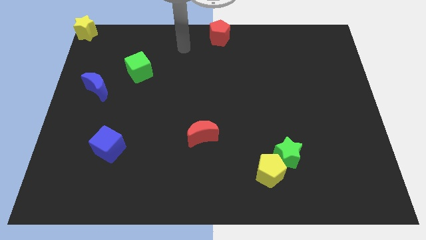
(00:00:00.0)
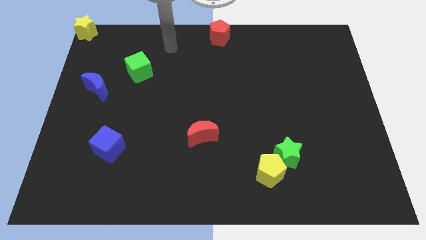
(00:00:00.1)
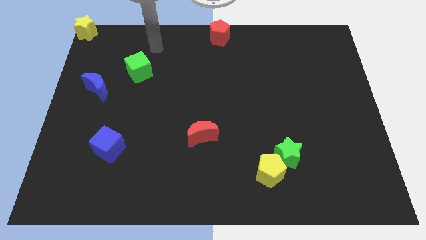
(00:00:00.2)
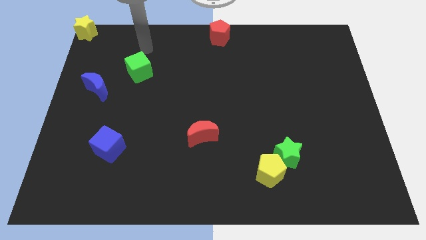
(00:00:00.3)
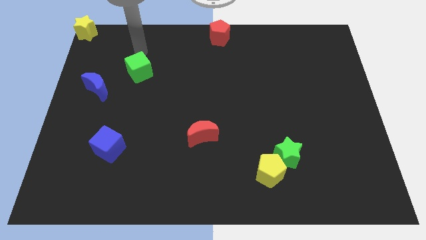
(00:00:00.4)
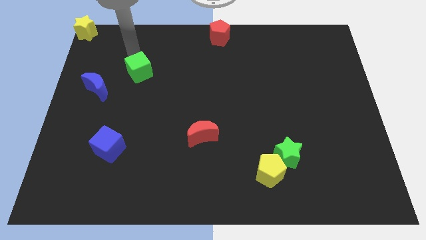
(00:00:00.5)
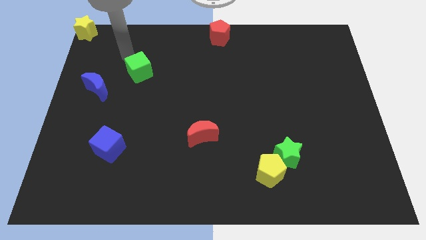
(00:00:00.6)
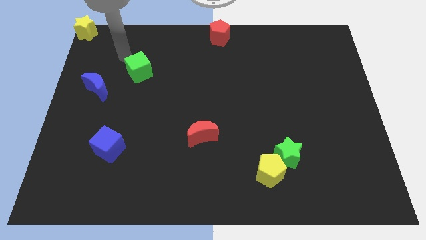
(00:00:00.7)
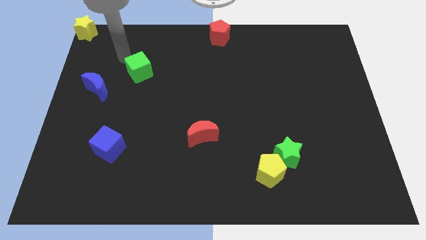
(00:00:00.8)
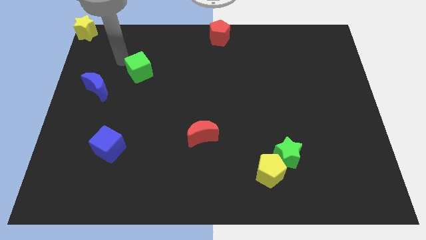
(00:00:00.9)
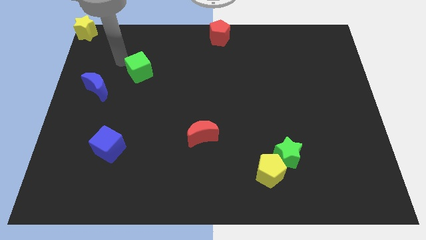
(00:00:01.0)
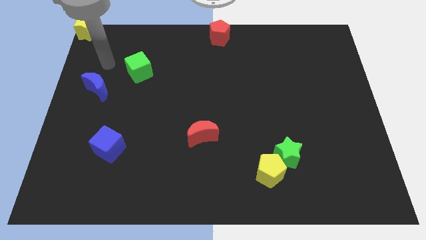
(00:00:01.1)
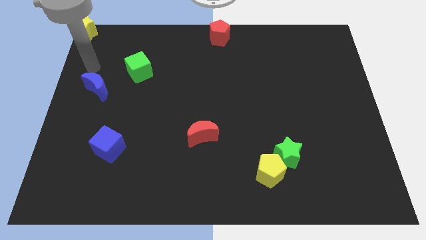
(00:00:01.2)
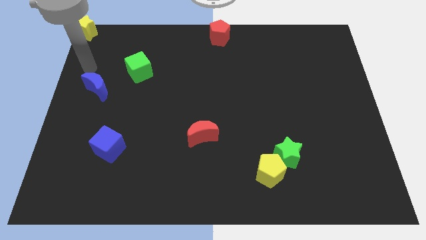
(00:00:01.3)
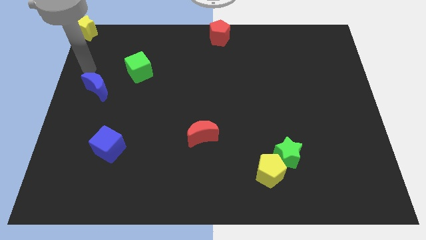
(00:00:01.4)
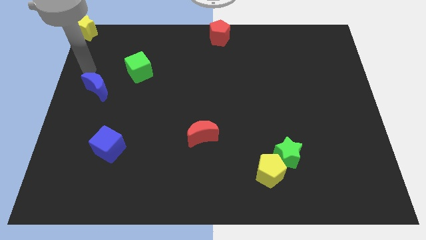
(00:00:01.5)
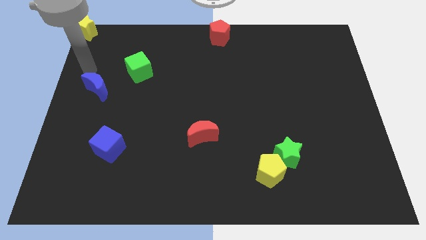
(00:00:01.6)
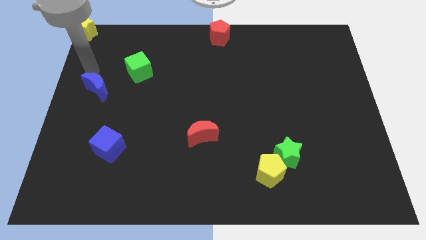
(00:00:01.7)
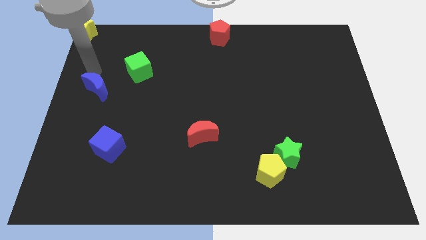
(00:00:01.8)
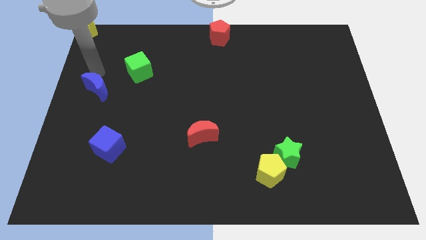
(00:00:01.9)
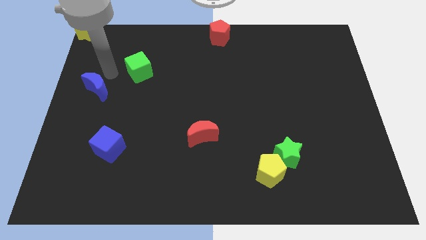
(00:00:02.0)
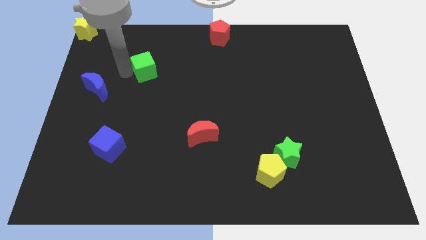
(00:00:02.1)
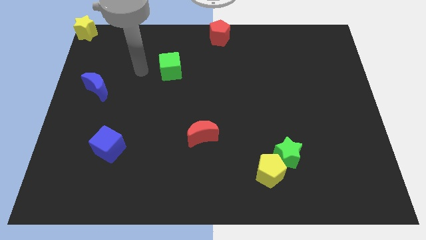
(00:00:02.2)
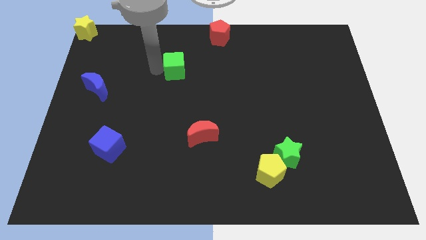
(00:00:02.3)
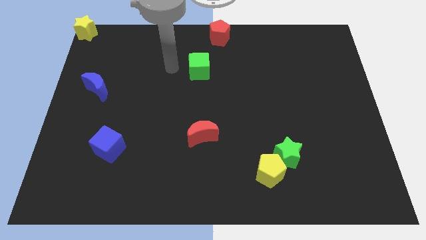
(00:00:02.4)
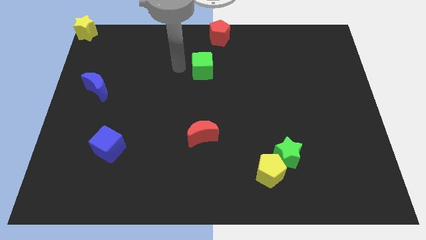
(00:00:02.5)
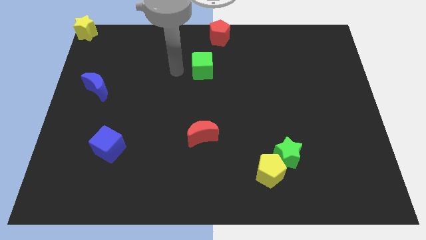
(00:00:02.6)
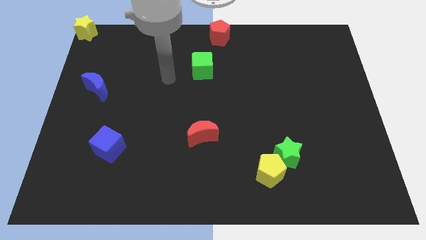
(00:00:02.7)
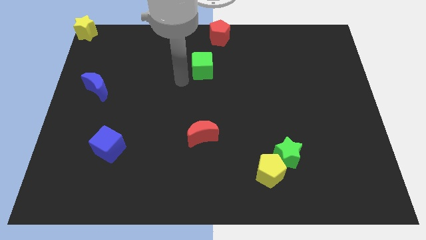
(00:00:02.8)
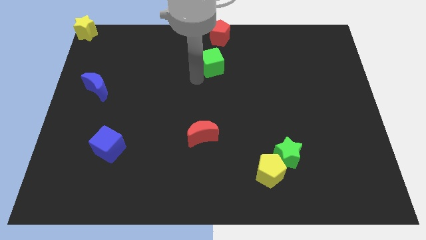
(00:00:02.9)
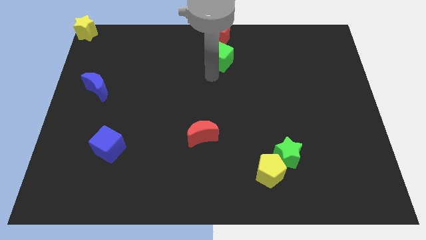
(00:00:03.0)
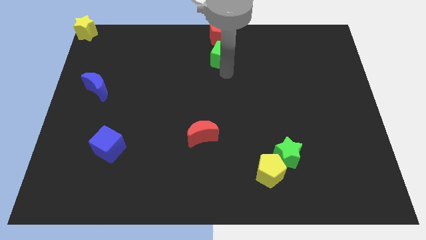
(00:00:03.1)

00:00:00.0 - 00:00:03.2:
drag the green cube to the bottom of the red pentagon

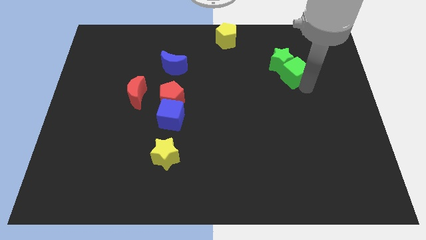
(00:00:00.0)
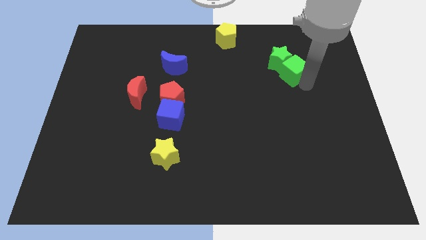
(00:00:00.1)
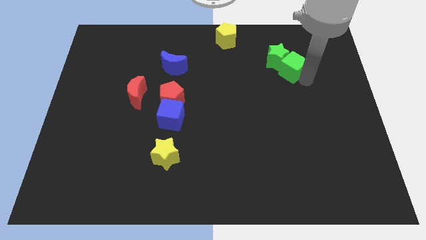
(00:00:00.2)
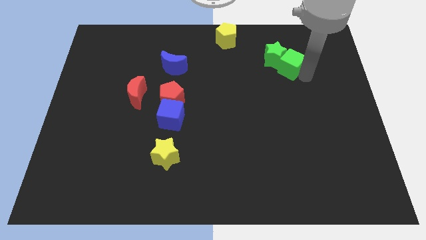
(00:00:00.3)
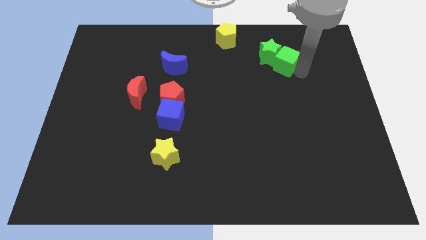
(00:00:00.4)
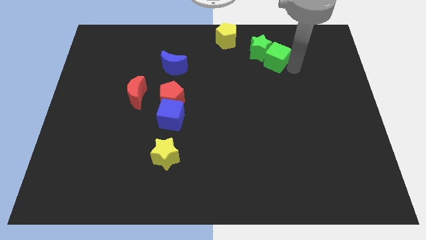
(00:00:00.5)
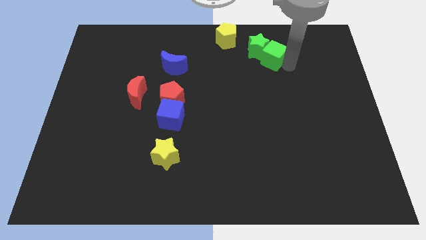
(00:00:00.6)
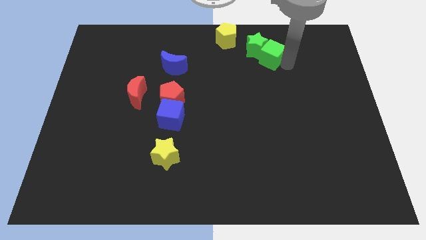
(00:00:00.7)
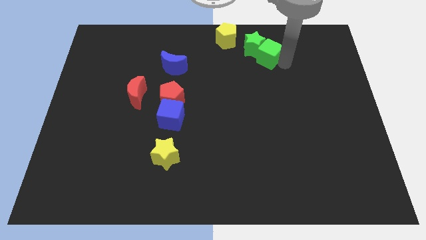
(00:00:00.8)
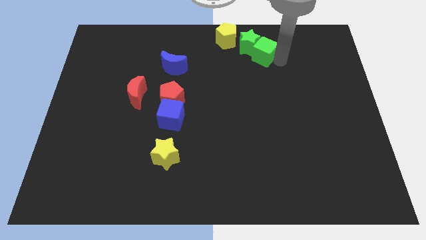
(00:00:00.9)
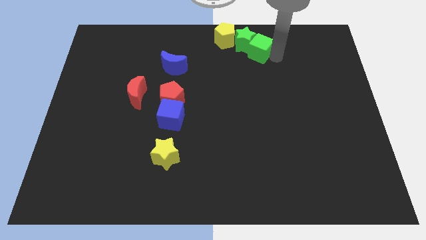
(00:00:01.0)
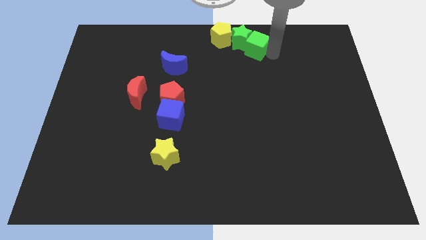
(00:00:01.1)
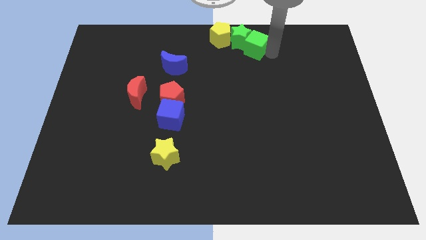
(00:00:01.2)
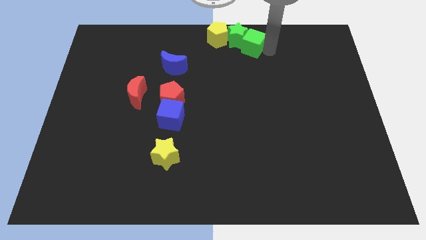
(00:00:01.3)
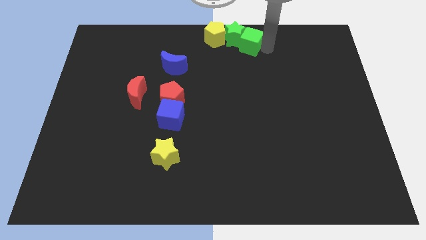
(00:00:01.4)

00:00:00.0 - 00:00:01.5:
move the green cube along with green star into the yellow pentagon

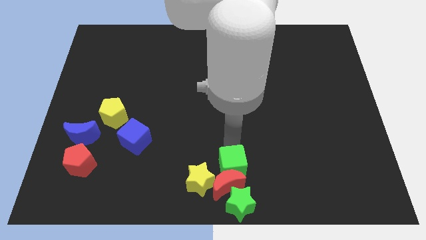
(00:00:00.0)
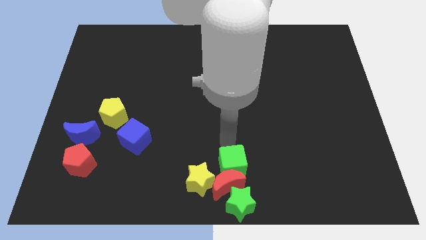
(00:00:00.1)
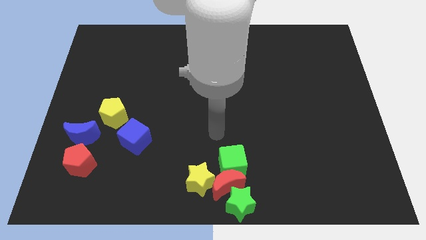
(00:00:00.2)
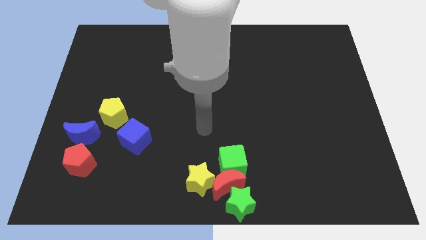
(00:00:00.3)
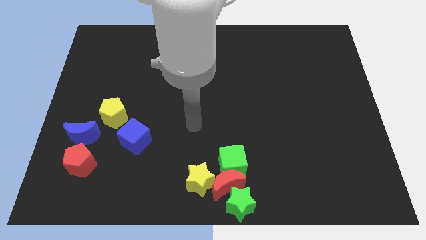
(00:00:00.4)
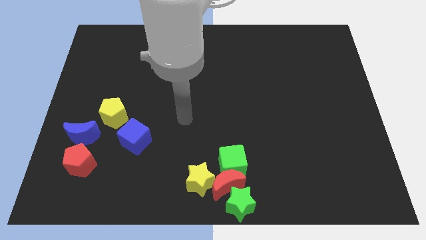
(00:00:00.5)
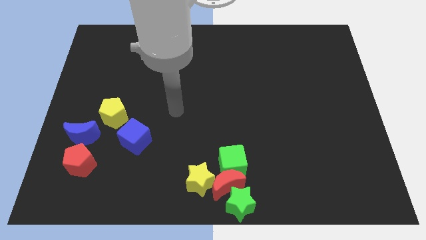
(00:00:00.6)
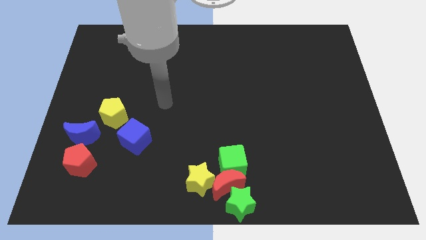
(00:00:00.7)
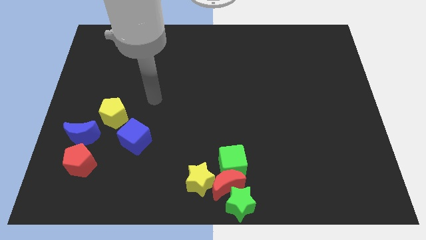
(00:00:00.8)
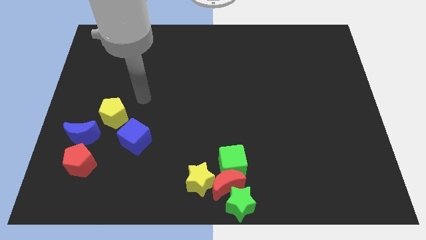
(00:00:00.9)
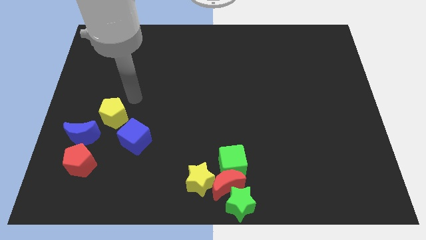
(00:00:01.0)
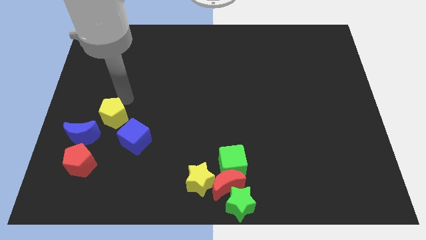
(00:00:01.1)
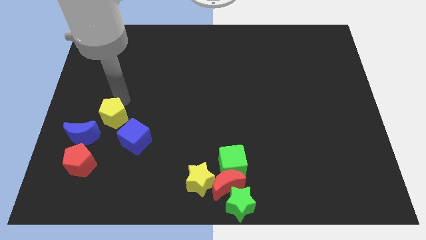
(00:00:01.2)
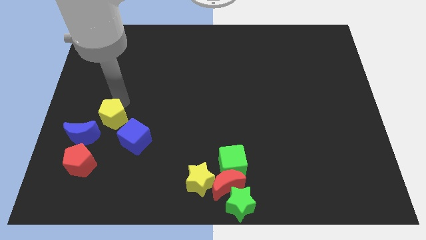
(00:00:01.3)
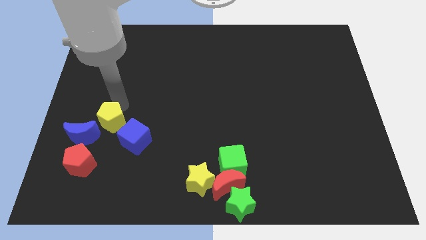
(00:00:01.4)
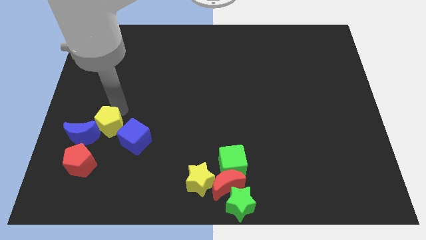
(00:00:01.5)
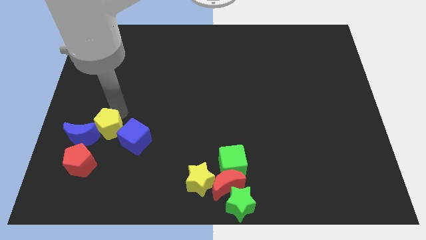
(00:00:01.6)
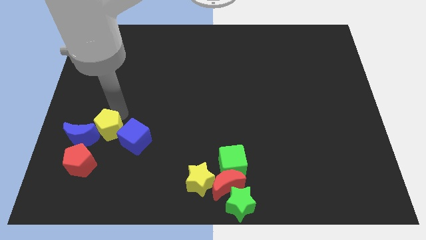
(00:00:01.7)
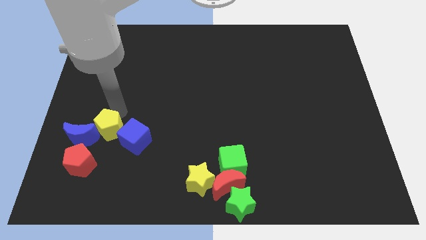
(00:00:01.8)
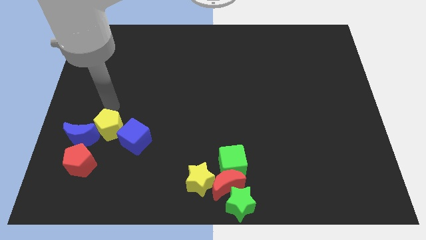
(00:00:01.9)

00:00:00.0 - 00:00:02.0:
slightly move yellow pentagon

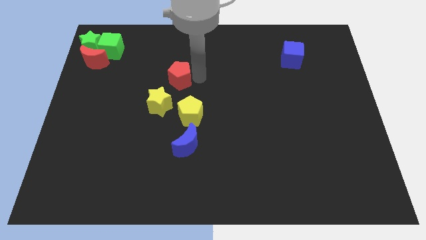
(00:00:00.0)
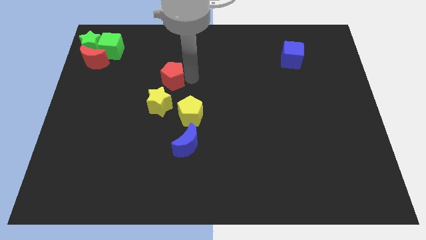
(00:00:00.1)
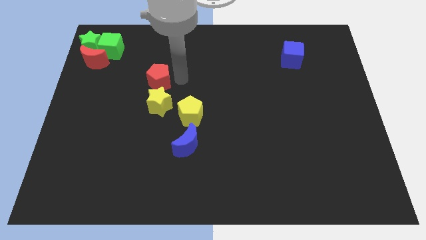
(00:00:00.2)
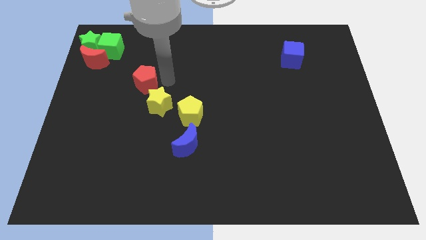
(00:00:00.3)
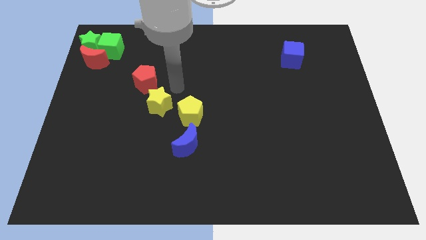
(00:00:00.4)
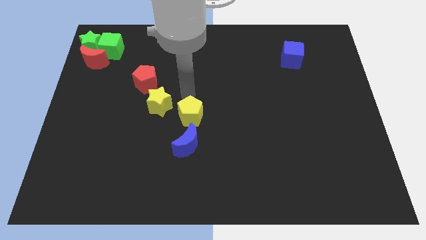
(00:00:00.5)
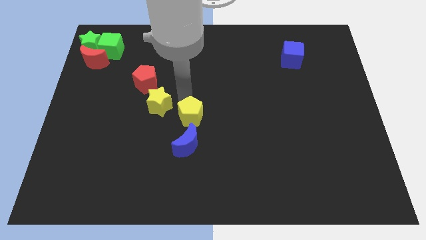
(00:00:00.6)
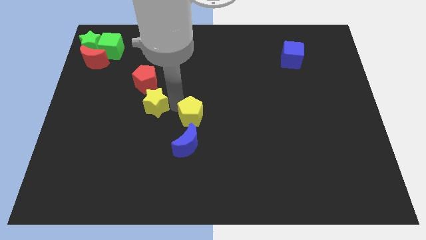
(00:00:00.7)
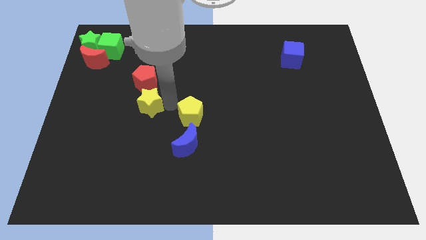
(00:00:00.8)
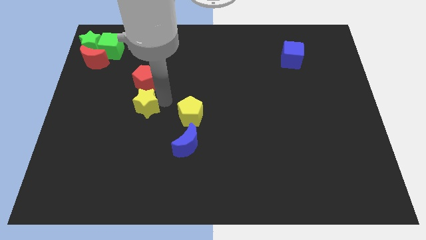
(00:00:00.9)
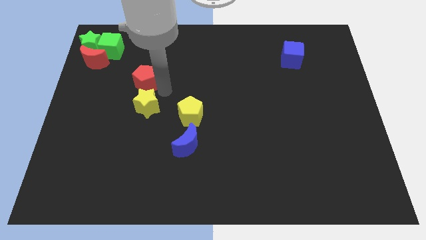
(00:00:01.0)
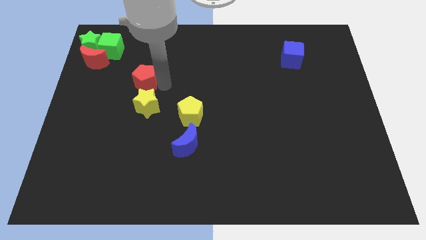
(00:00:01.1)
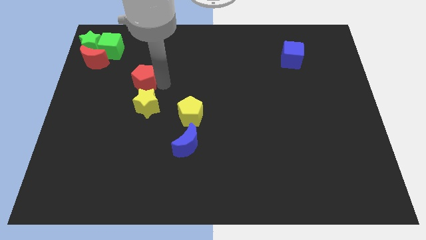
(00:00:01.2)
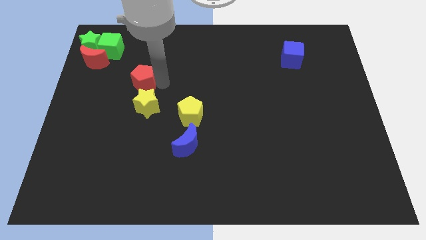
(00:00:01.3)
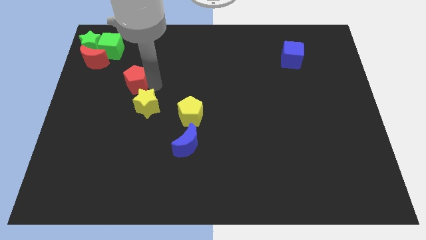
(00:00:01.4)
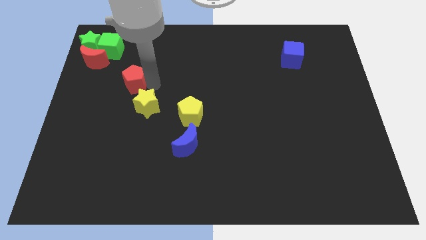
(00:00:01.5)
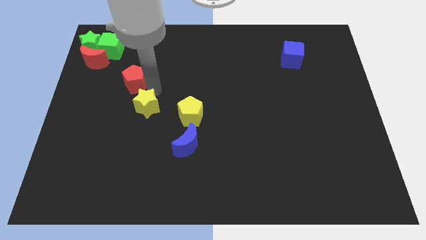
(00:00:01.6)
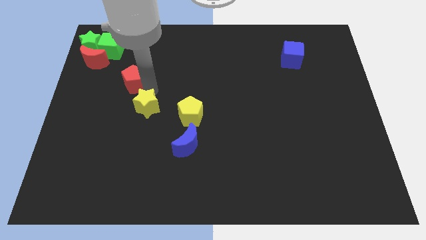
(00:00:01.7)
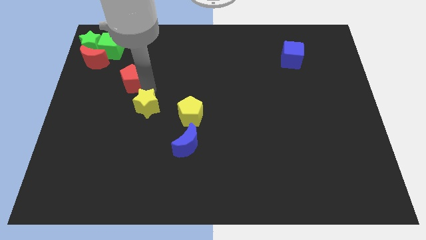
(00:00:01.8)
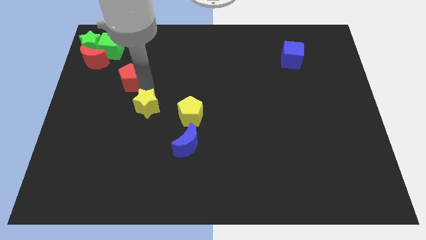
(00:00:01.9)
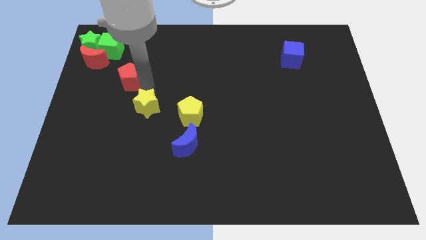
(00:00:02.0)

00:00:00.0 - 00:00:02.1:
move the red pentagon diagonally top left to the yellow star
